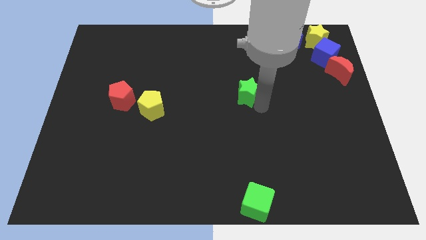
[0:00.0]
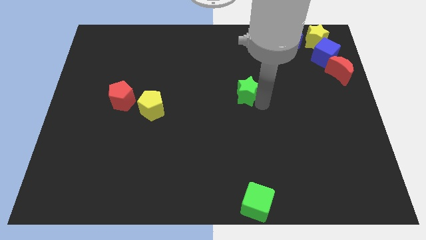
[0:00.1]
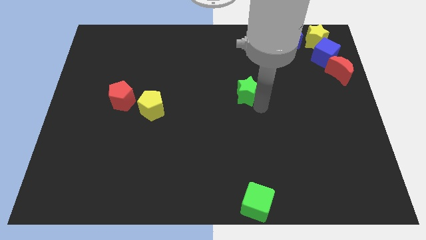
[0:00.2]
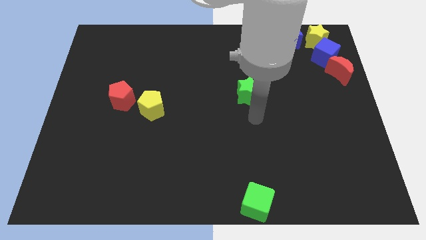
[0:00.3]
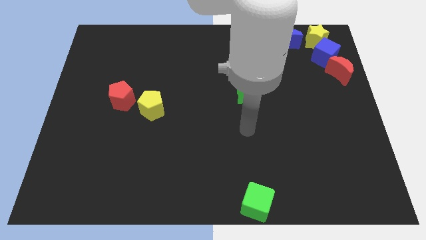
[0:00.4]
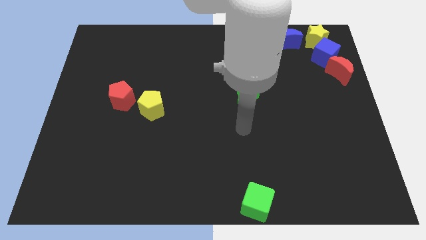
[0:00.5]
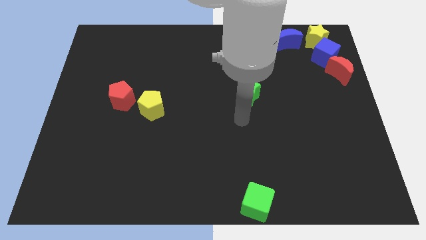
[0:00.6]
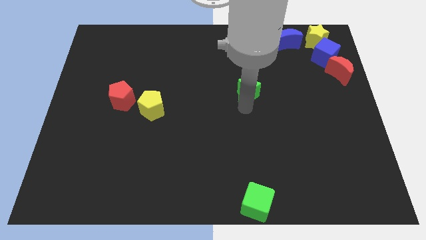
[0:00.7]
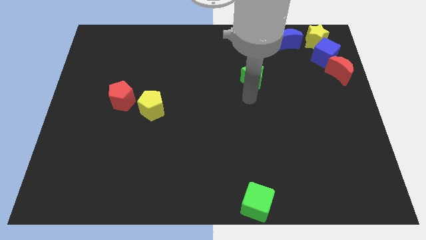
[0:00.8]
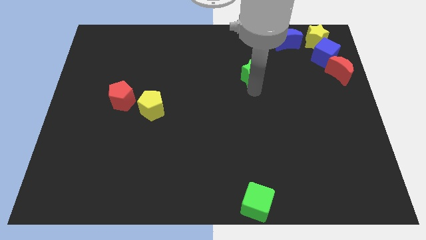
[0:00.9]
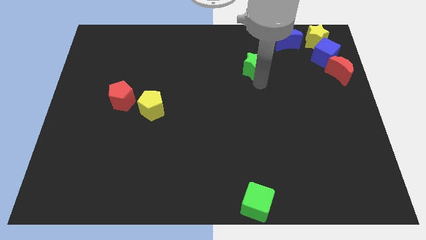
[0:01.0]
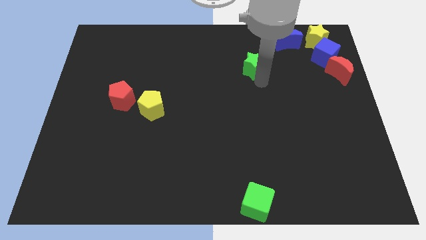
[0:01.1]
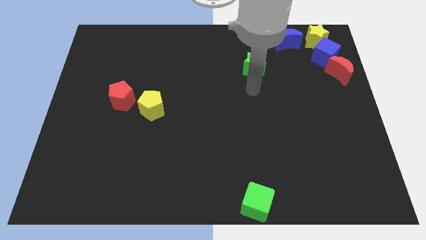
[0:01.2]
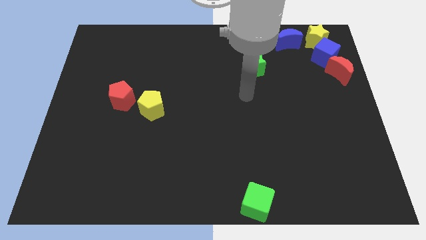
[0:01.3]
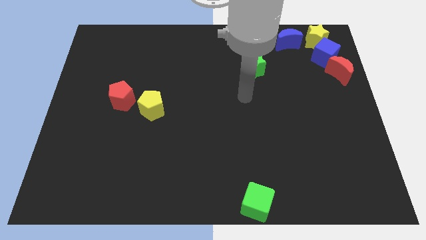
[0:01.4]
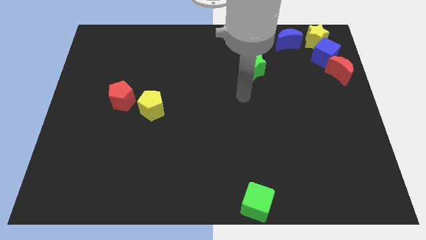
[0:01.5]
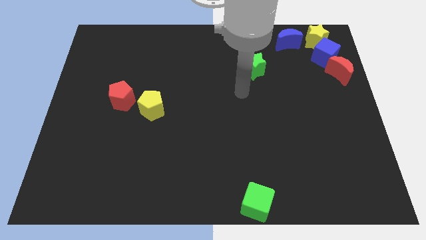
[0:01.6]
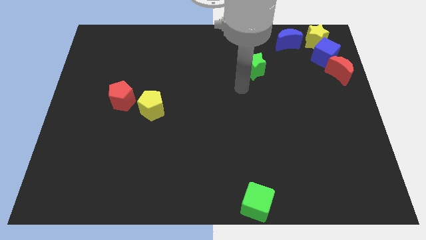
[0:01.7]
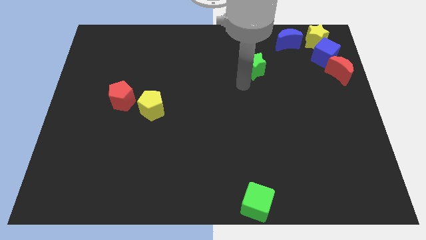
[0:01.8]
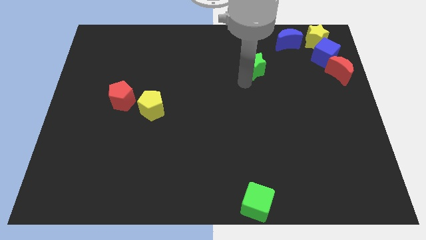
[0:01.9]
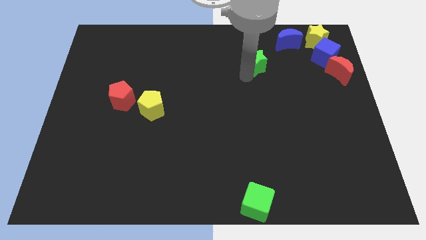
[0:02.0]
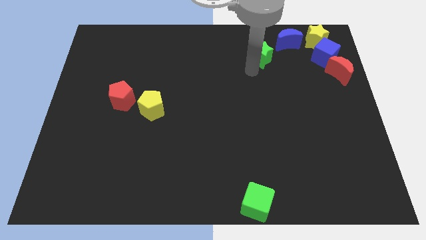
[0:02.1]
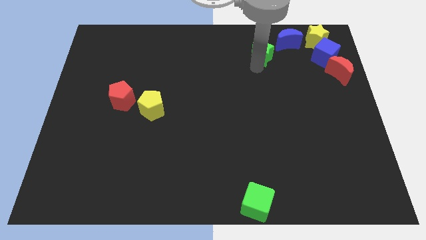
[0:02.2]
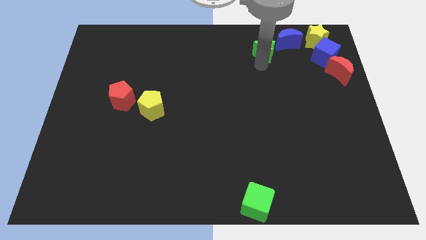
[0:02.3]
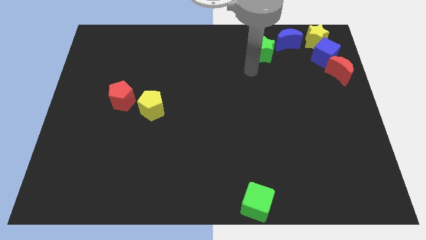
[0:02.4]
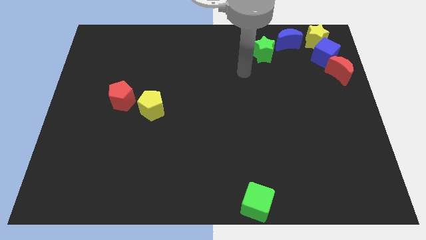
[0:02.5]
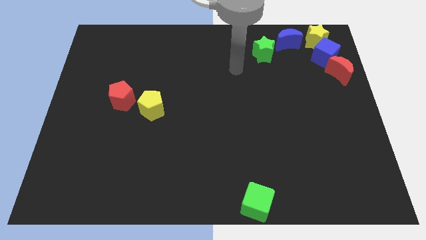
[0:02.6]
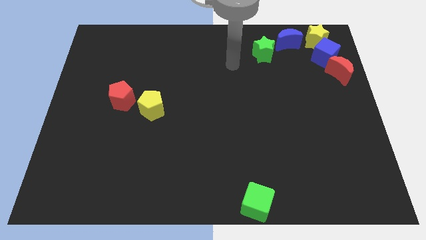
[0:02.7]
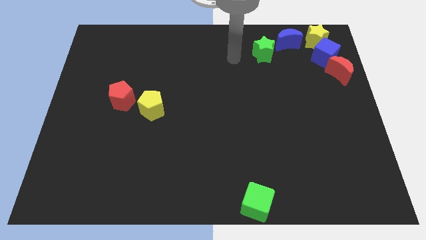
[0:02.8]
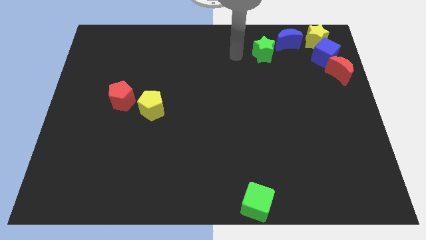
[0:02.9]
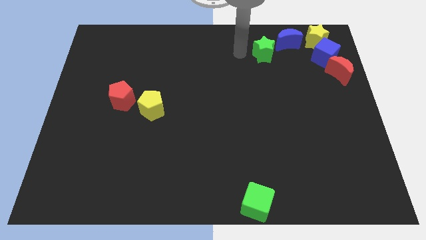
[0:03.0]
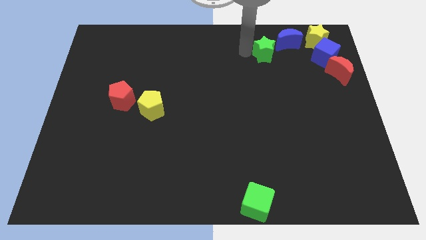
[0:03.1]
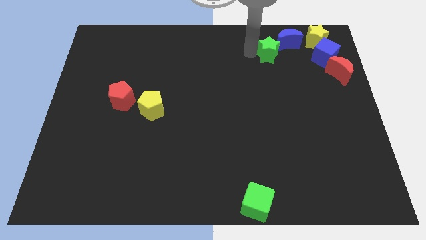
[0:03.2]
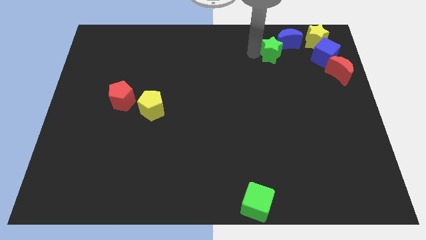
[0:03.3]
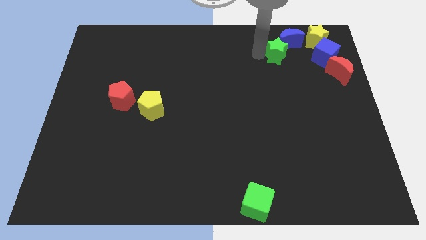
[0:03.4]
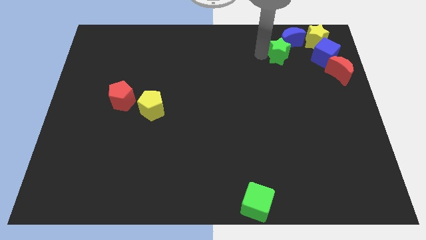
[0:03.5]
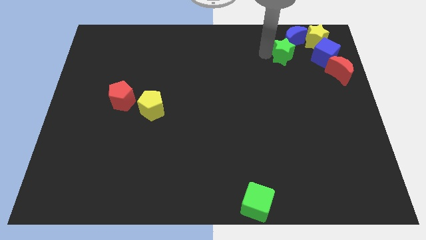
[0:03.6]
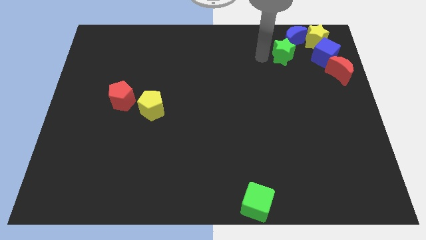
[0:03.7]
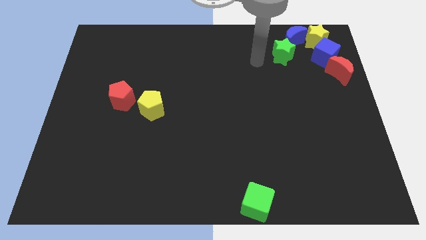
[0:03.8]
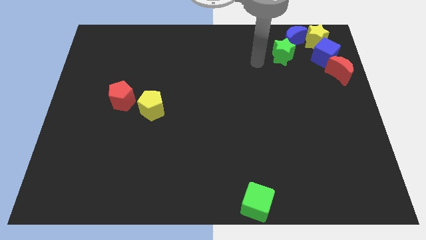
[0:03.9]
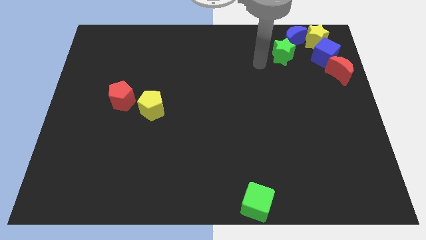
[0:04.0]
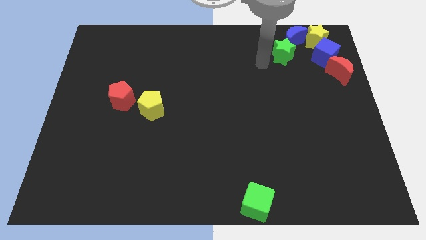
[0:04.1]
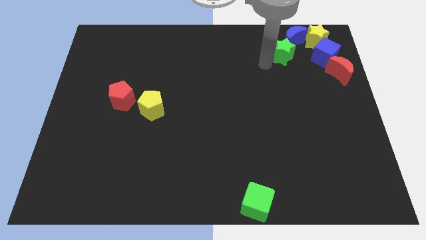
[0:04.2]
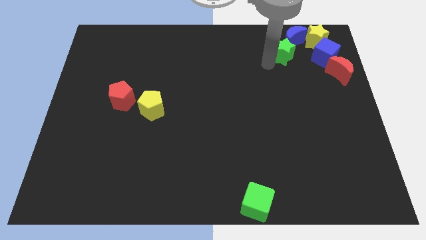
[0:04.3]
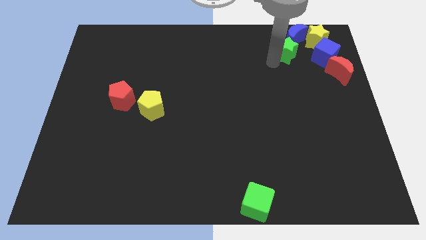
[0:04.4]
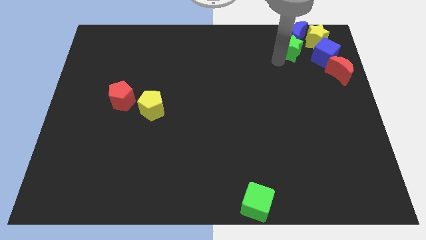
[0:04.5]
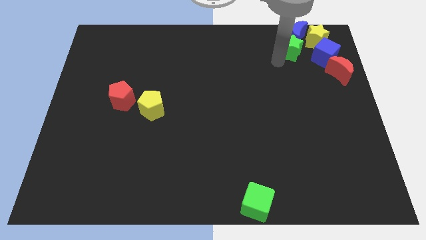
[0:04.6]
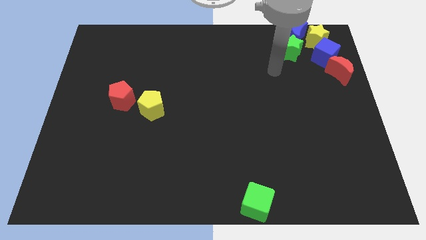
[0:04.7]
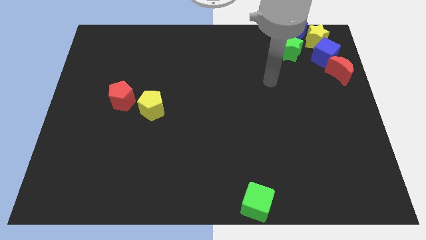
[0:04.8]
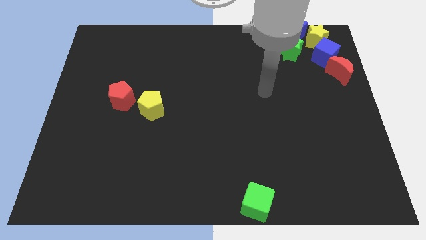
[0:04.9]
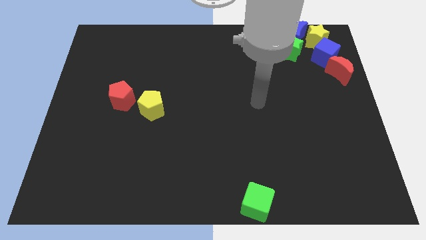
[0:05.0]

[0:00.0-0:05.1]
place the green star below the blue moon

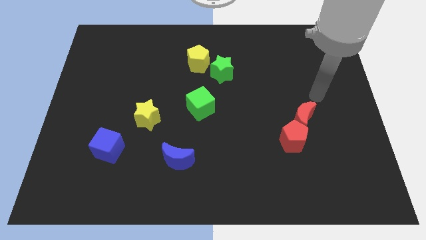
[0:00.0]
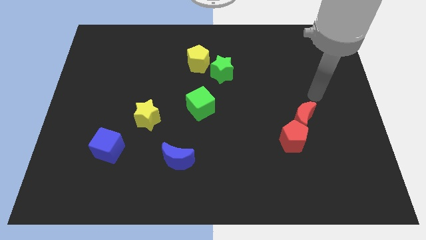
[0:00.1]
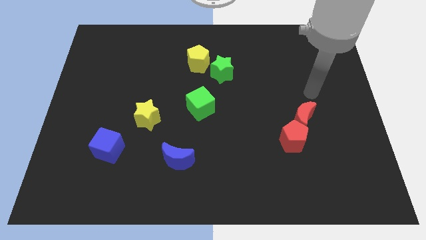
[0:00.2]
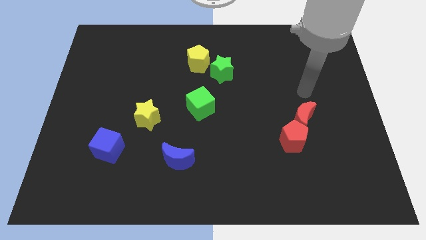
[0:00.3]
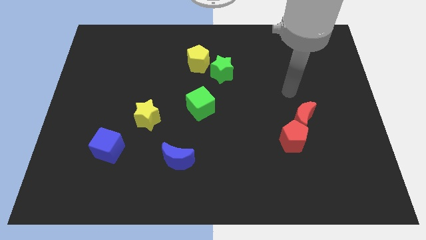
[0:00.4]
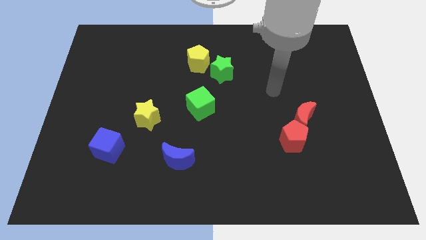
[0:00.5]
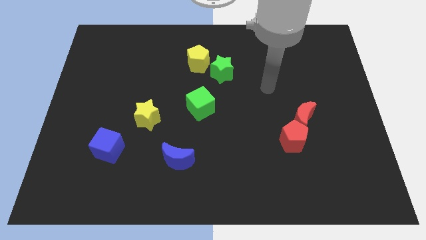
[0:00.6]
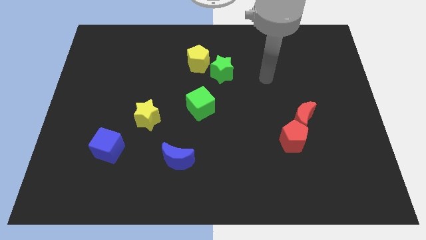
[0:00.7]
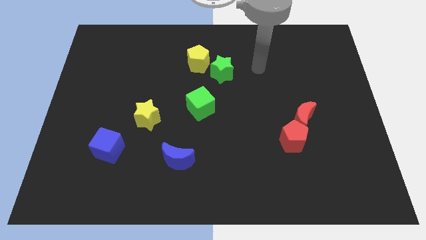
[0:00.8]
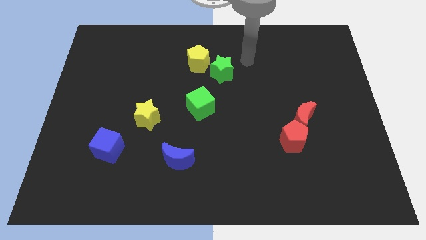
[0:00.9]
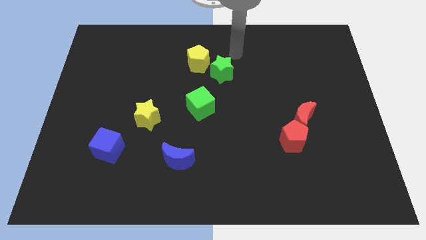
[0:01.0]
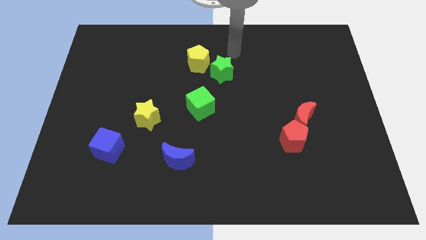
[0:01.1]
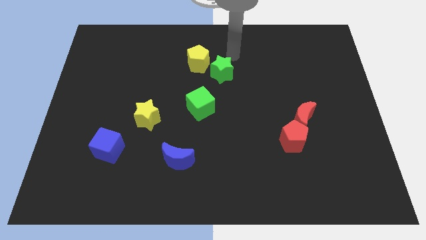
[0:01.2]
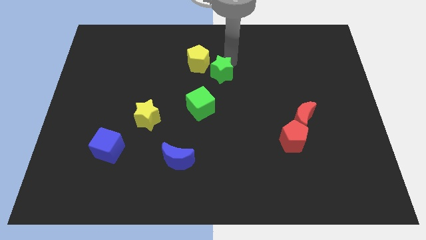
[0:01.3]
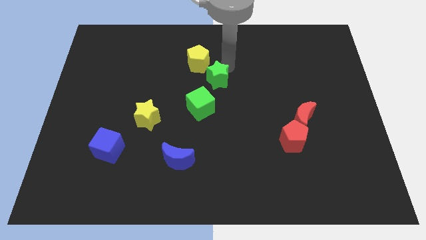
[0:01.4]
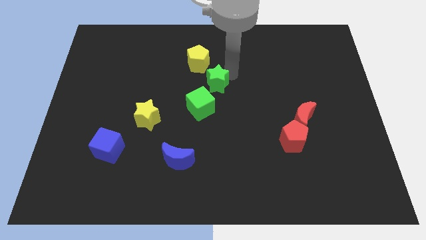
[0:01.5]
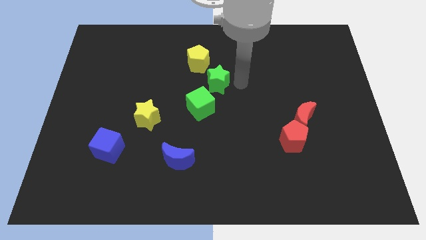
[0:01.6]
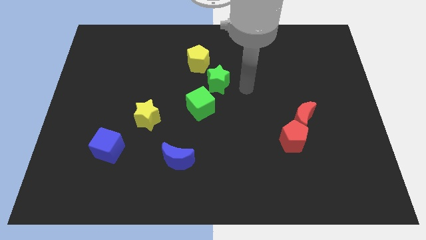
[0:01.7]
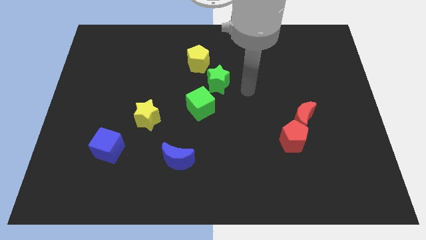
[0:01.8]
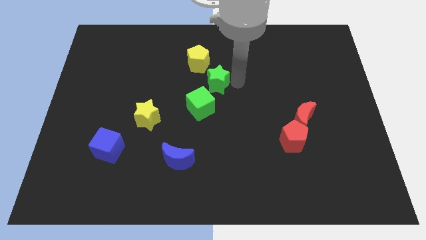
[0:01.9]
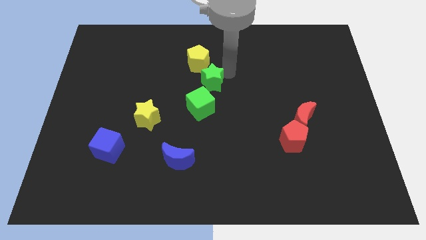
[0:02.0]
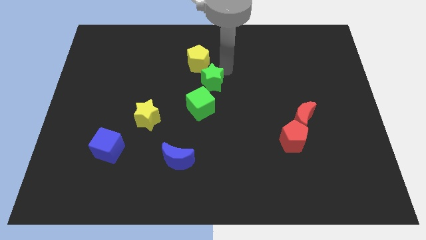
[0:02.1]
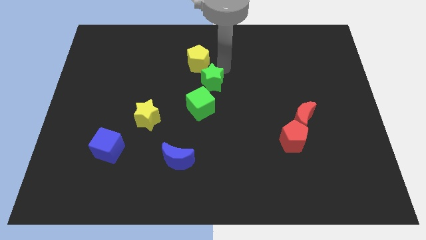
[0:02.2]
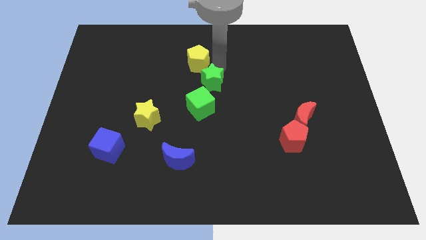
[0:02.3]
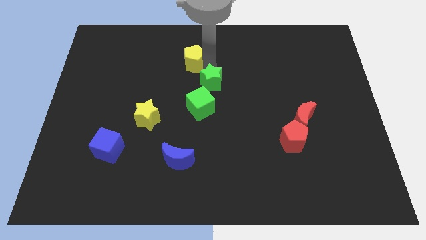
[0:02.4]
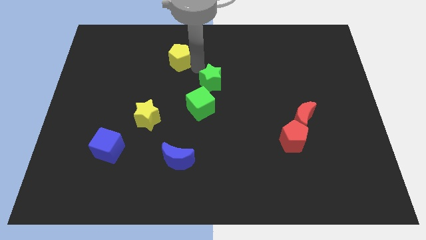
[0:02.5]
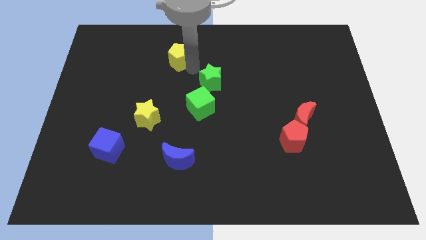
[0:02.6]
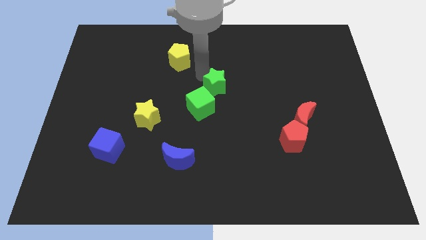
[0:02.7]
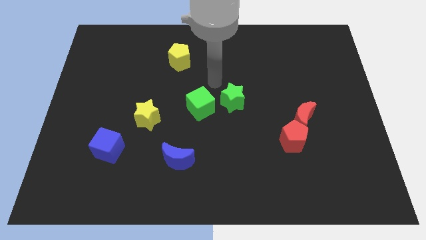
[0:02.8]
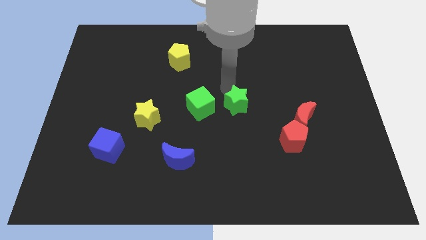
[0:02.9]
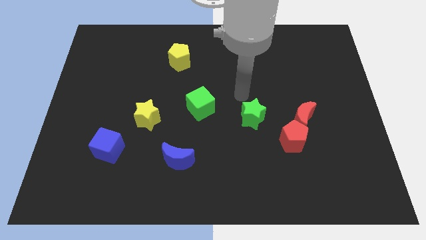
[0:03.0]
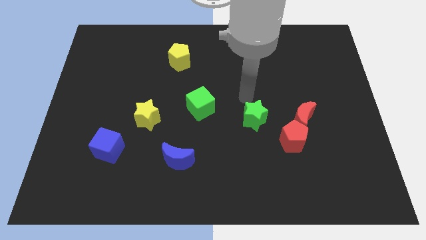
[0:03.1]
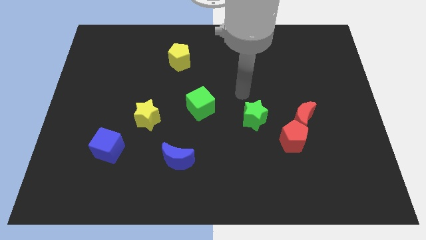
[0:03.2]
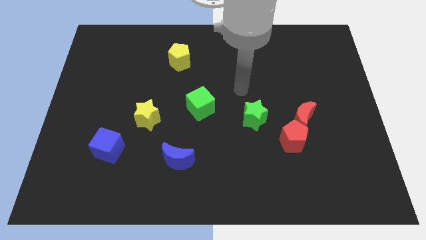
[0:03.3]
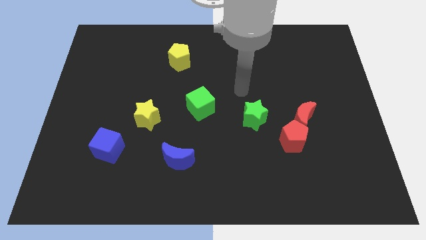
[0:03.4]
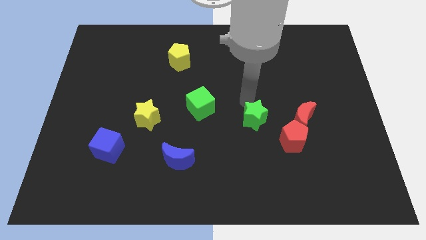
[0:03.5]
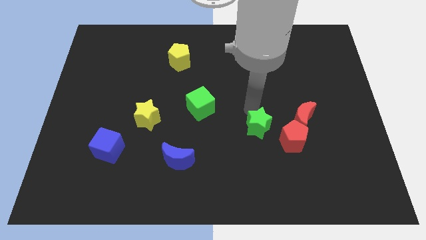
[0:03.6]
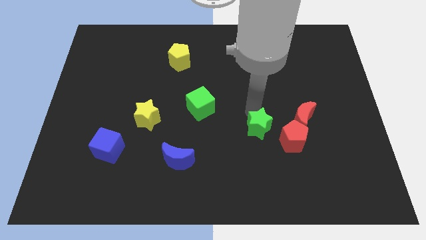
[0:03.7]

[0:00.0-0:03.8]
push the green star away from the yellow pentagon
